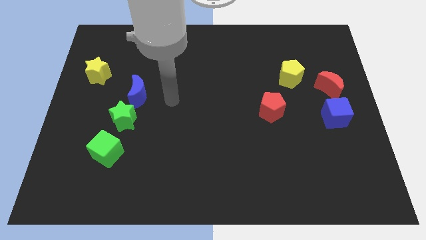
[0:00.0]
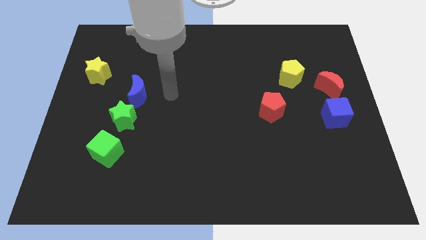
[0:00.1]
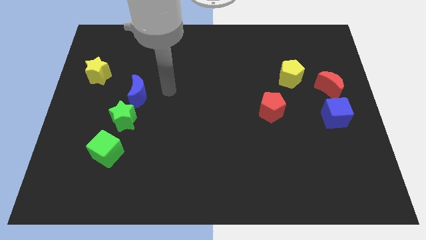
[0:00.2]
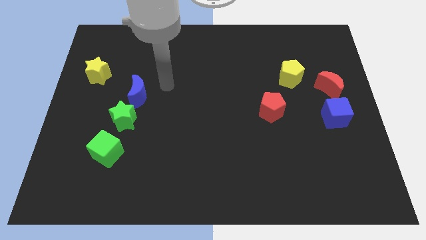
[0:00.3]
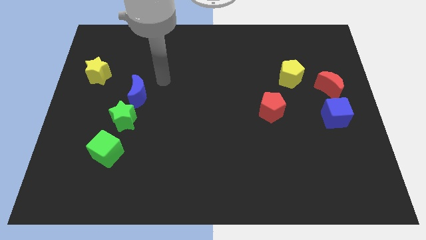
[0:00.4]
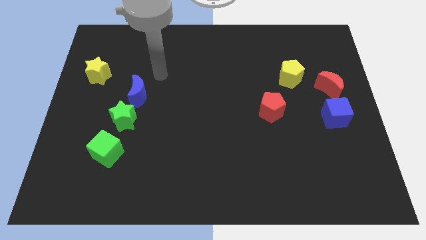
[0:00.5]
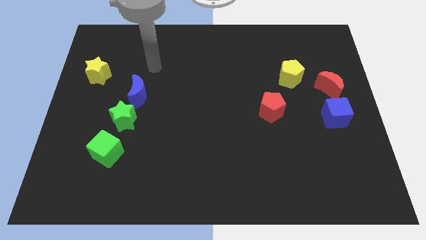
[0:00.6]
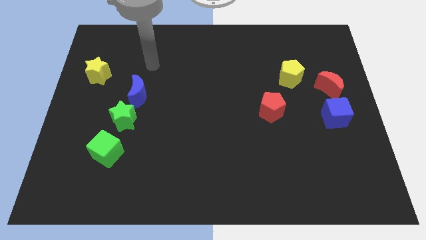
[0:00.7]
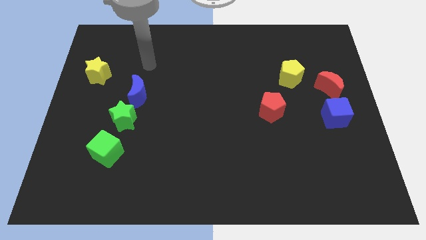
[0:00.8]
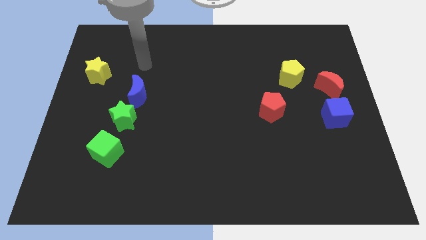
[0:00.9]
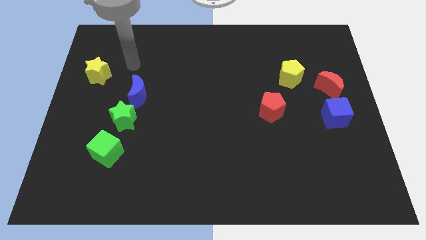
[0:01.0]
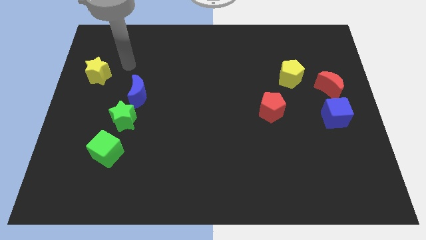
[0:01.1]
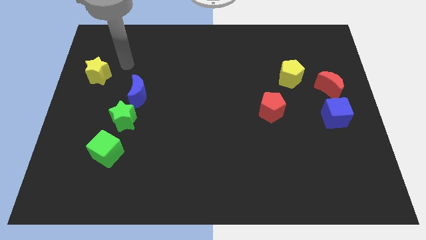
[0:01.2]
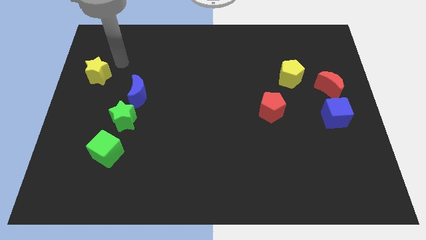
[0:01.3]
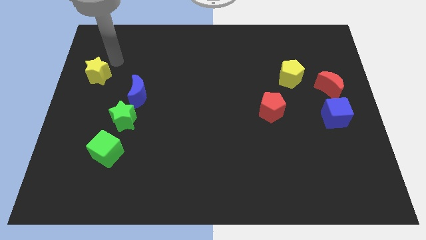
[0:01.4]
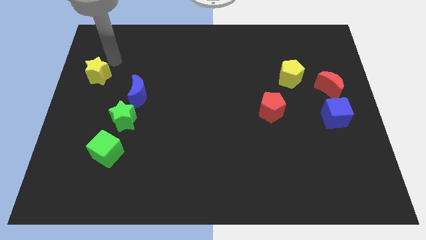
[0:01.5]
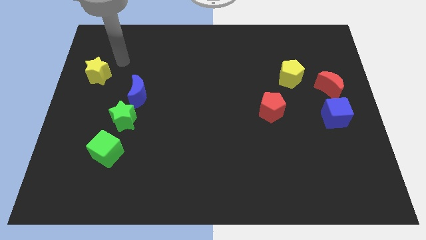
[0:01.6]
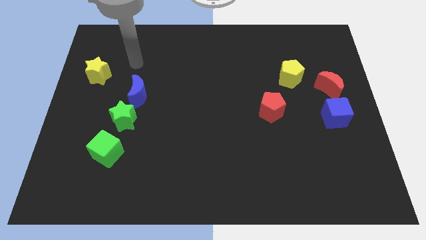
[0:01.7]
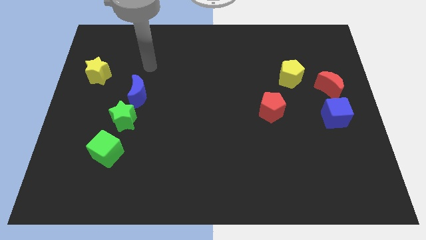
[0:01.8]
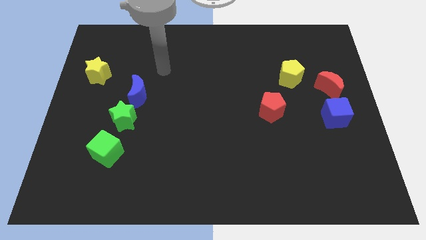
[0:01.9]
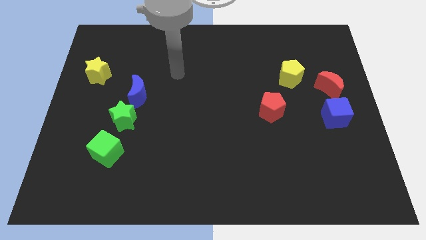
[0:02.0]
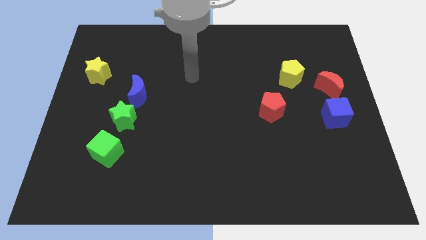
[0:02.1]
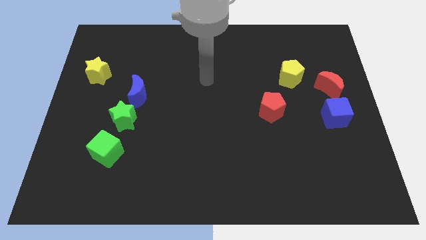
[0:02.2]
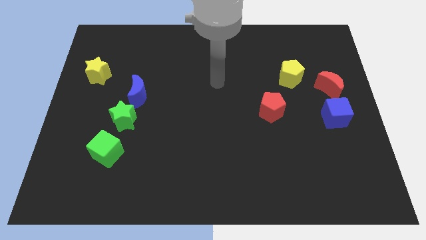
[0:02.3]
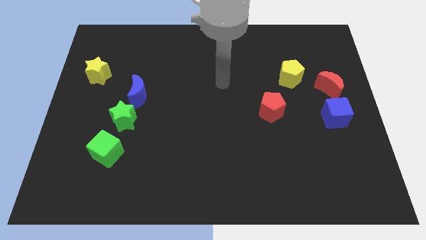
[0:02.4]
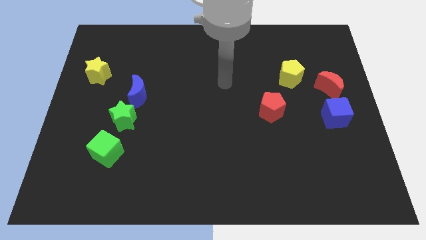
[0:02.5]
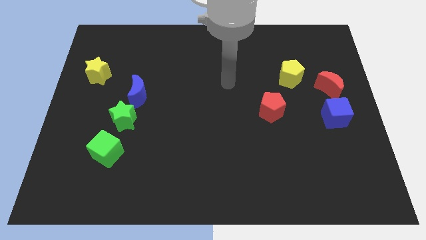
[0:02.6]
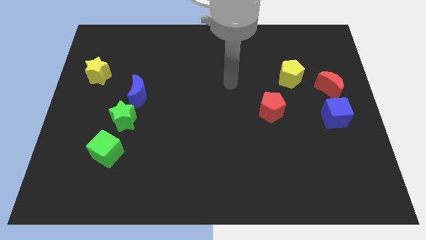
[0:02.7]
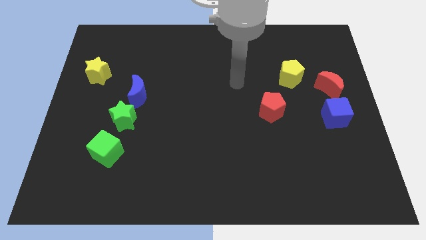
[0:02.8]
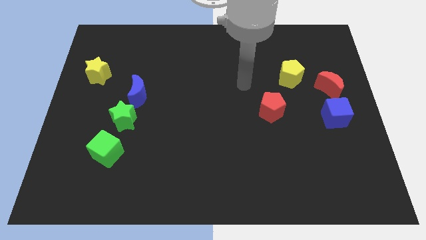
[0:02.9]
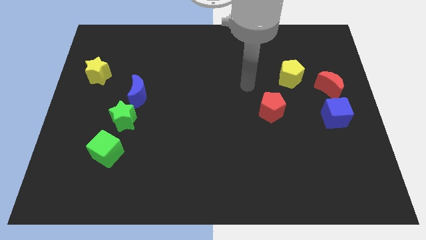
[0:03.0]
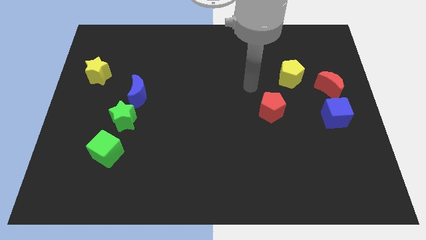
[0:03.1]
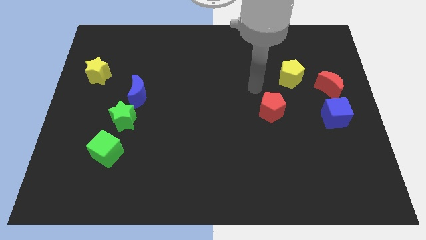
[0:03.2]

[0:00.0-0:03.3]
point the arm to the top left of the red pentagon

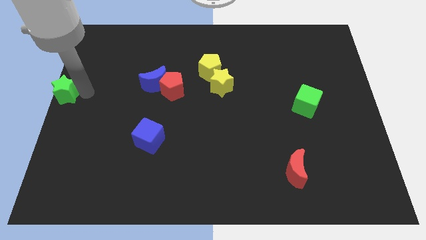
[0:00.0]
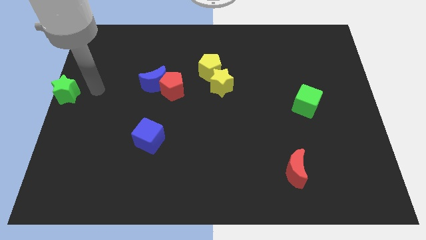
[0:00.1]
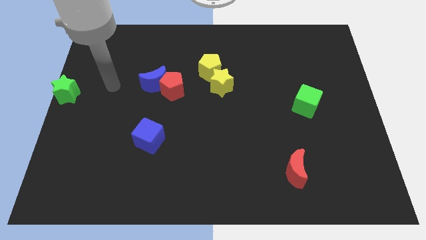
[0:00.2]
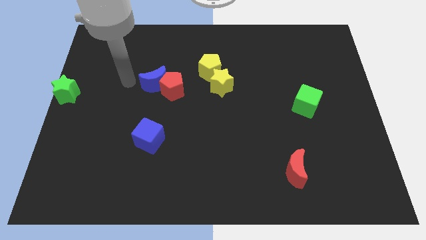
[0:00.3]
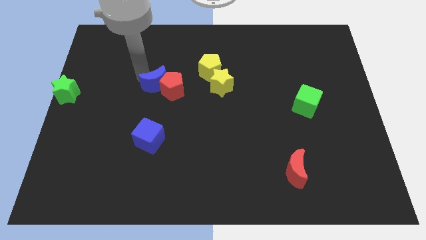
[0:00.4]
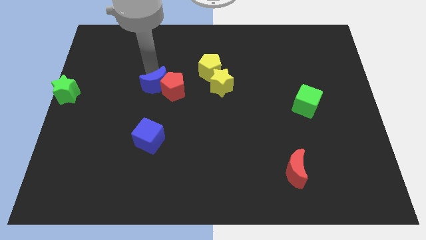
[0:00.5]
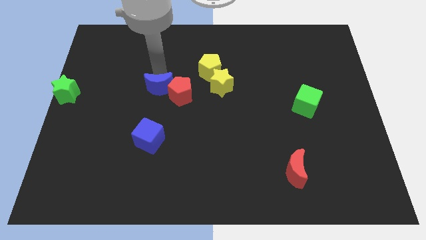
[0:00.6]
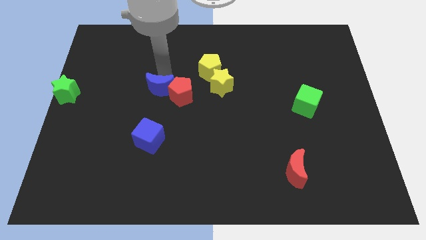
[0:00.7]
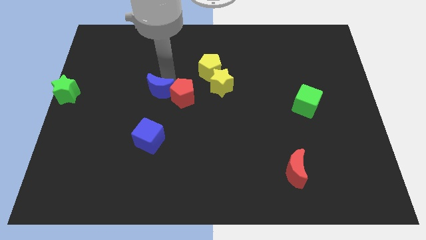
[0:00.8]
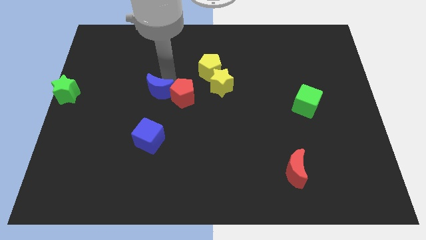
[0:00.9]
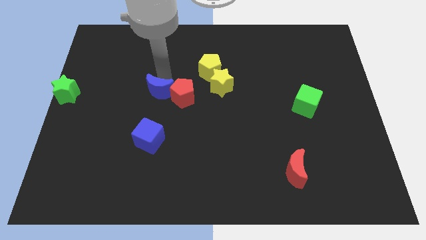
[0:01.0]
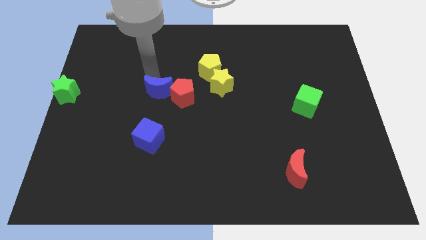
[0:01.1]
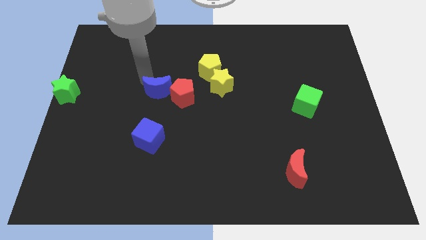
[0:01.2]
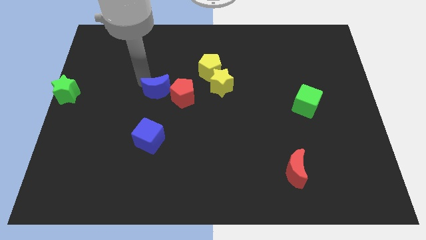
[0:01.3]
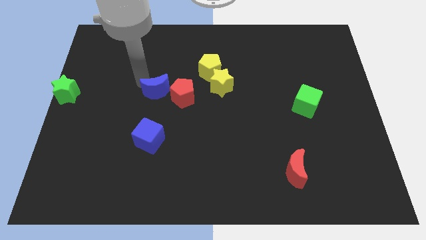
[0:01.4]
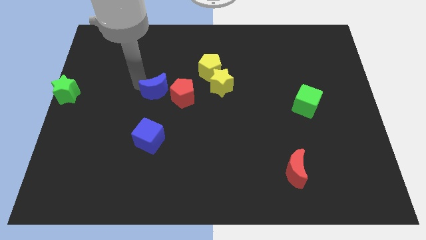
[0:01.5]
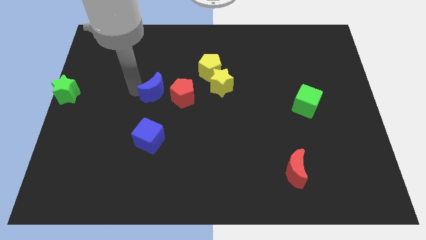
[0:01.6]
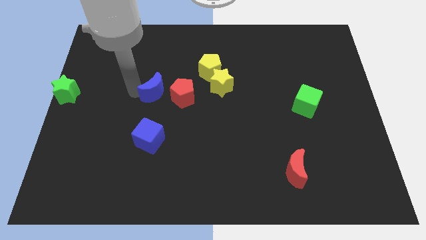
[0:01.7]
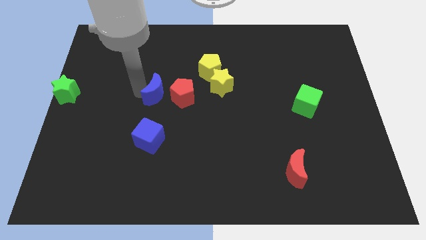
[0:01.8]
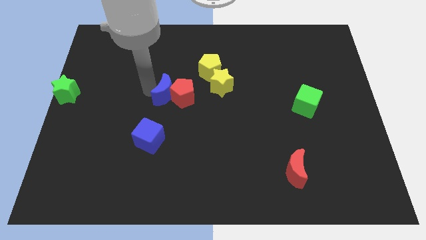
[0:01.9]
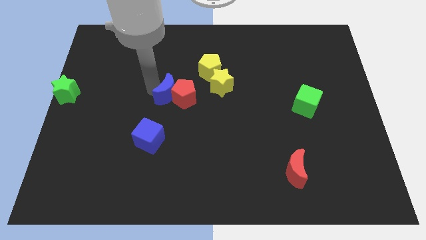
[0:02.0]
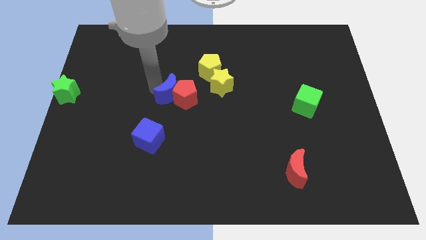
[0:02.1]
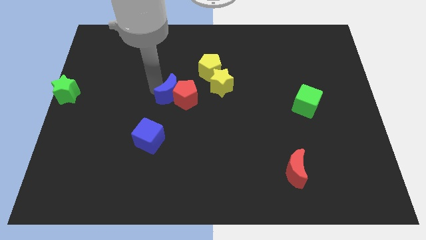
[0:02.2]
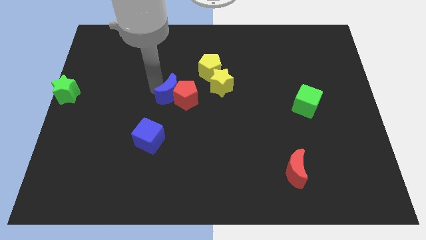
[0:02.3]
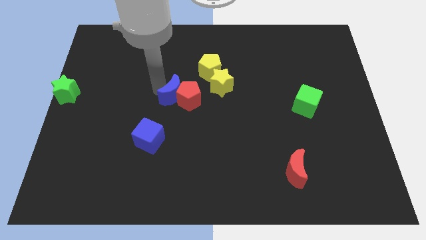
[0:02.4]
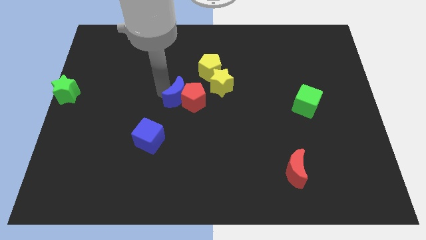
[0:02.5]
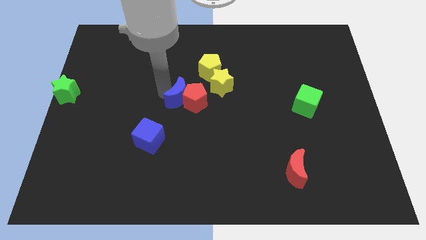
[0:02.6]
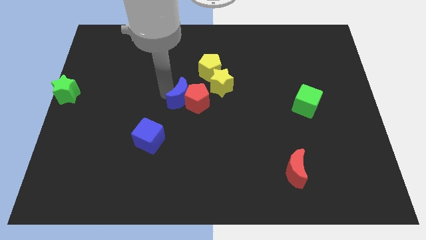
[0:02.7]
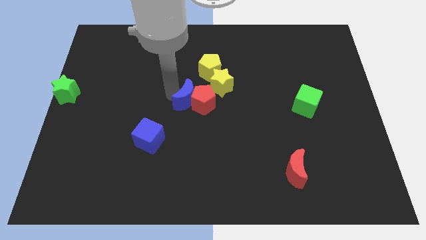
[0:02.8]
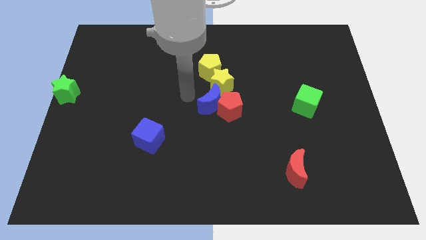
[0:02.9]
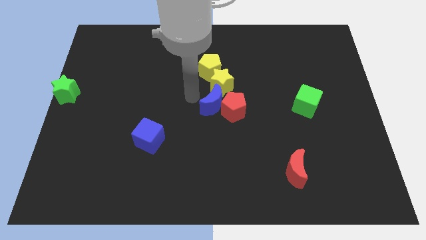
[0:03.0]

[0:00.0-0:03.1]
move the blue crescent along with the red pentagon to the bottom of the yellow star

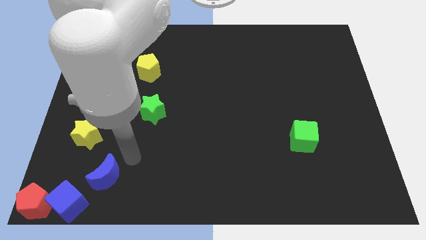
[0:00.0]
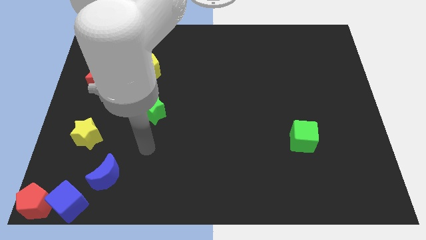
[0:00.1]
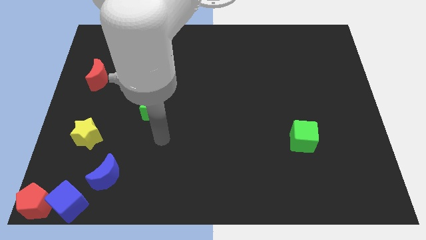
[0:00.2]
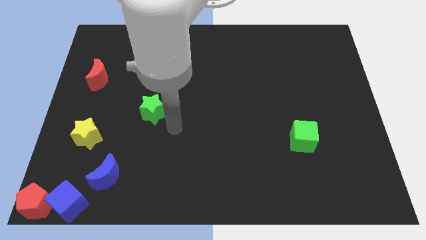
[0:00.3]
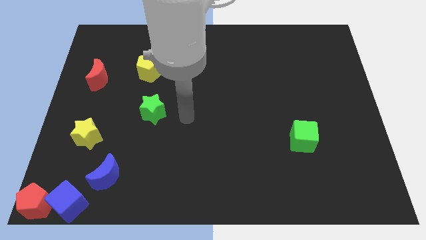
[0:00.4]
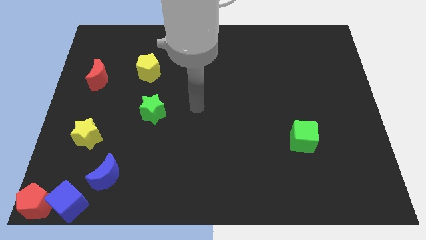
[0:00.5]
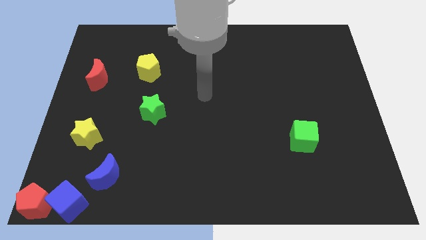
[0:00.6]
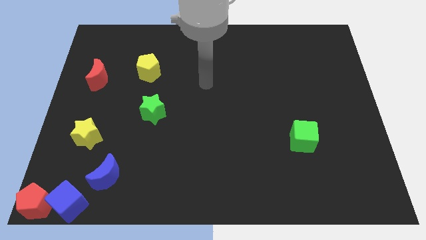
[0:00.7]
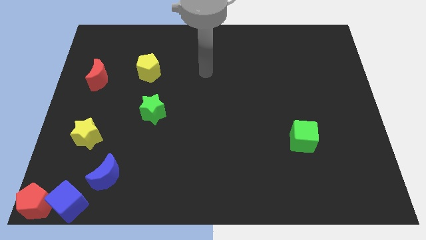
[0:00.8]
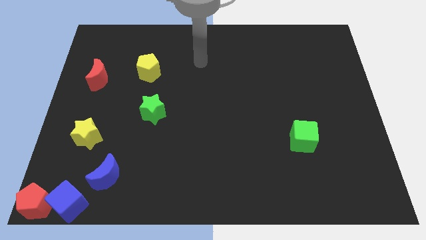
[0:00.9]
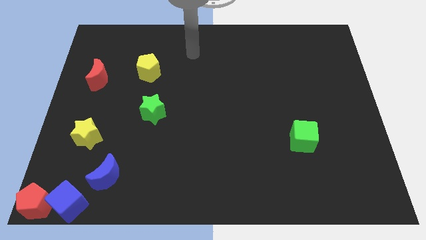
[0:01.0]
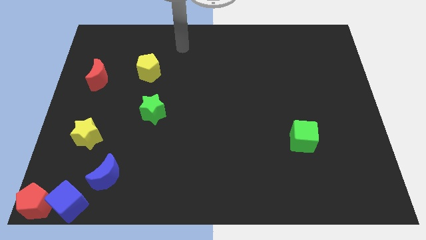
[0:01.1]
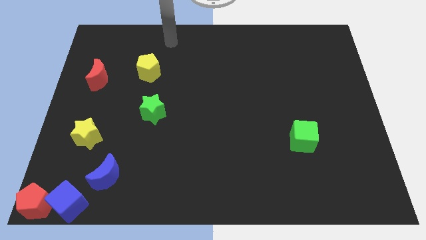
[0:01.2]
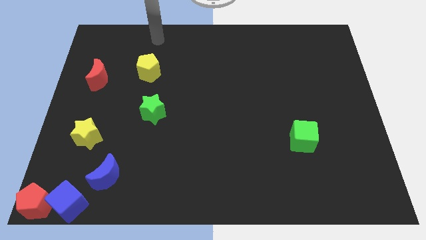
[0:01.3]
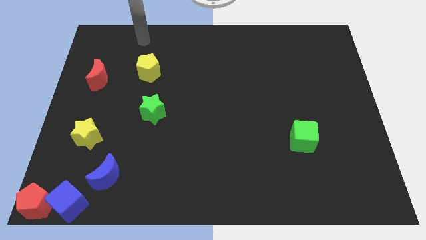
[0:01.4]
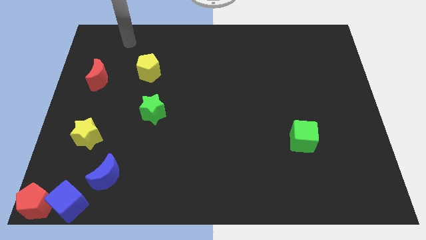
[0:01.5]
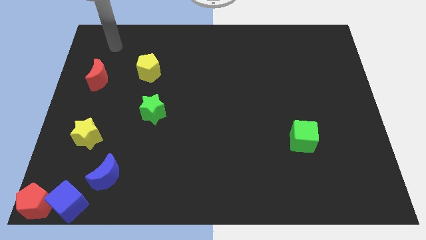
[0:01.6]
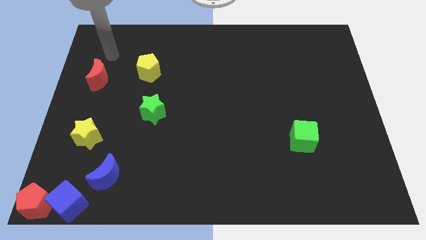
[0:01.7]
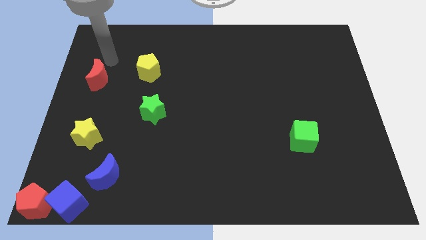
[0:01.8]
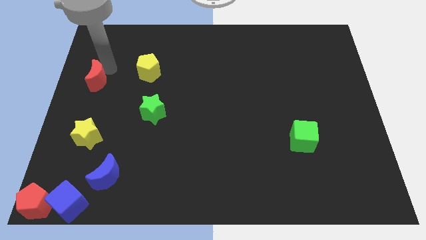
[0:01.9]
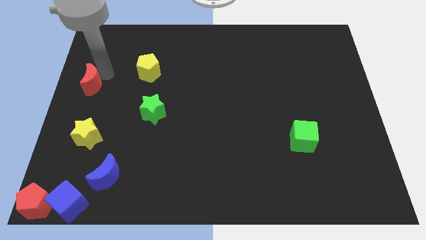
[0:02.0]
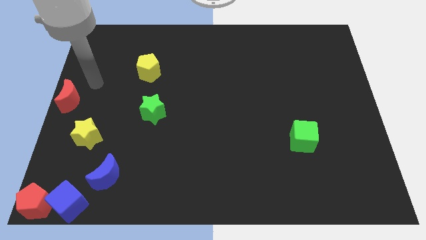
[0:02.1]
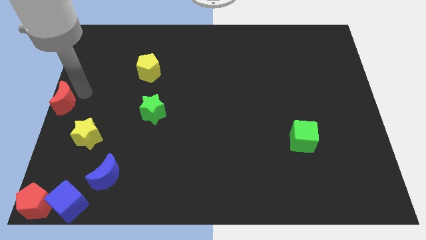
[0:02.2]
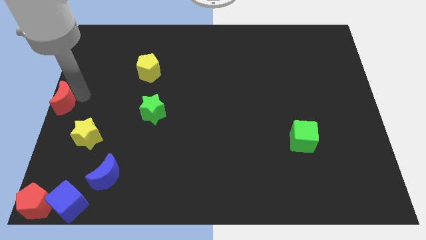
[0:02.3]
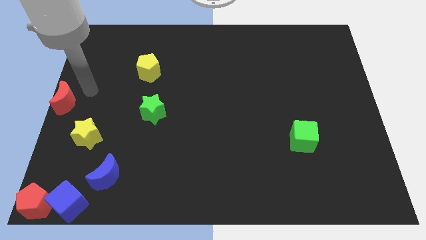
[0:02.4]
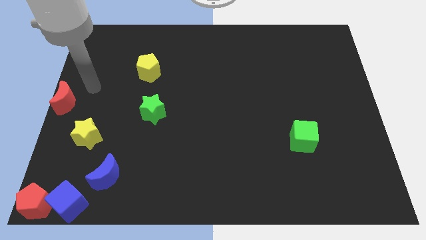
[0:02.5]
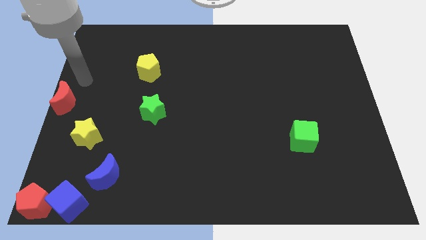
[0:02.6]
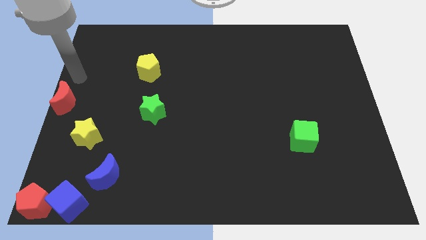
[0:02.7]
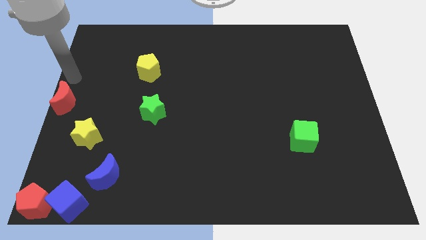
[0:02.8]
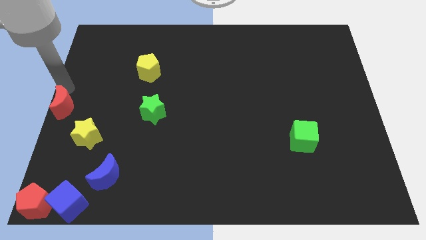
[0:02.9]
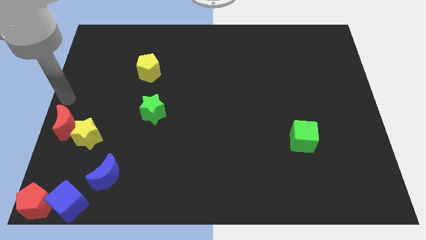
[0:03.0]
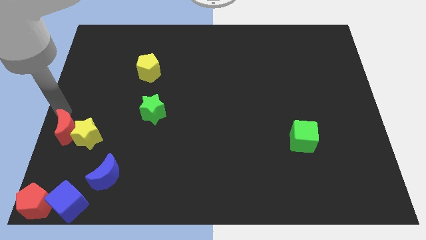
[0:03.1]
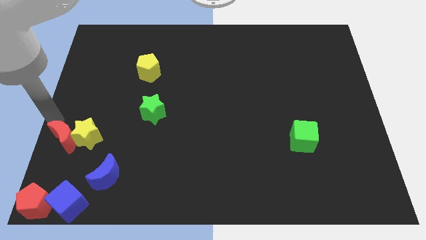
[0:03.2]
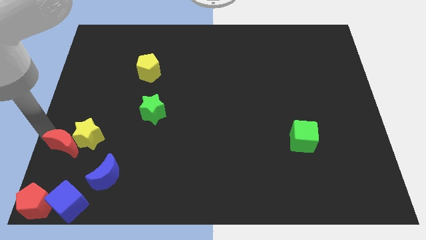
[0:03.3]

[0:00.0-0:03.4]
push the red crescent to the left side of the yellow star
